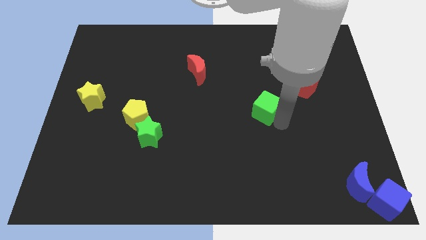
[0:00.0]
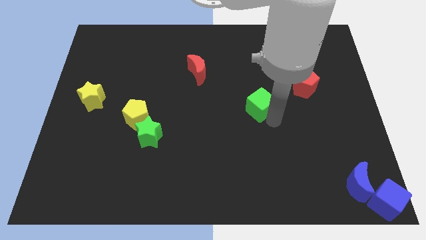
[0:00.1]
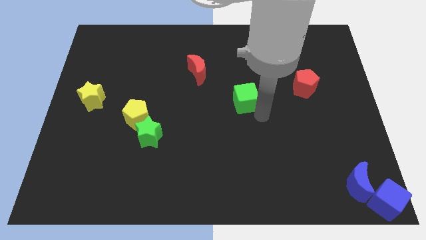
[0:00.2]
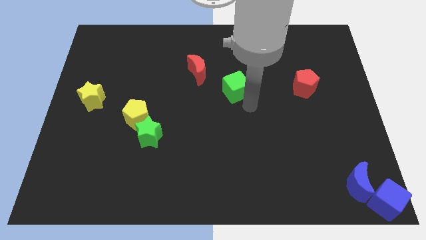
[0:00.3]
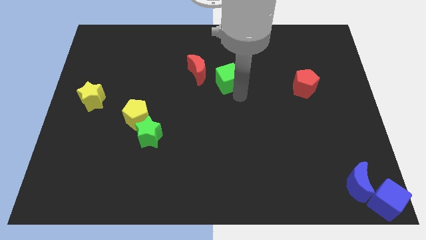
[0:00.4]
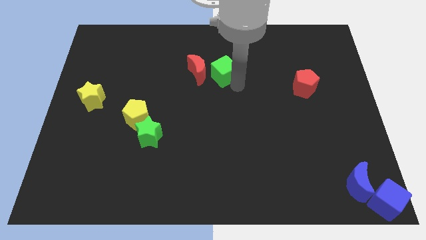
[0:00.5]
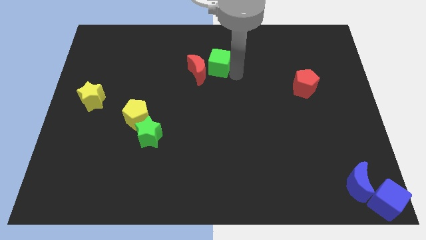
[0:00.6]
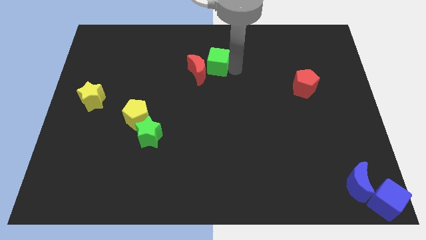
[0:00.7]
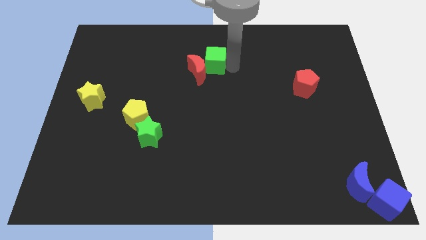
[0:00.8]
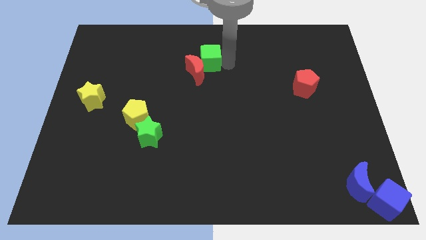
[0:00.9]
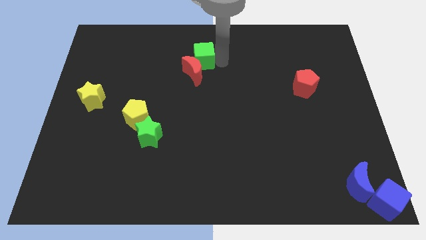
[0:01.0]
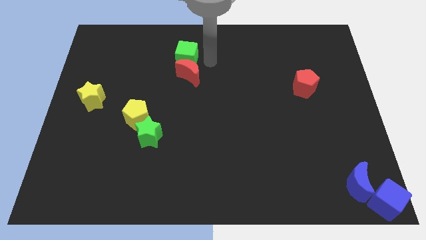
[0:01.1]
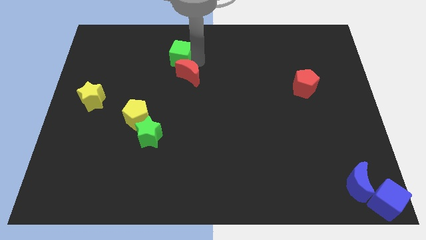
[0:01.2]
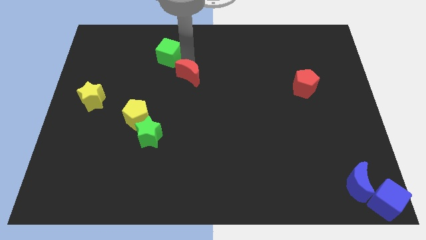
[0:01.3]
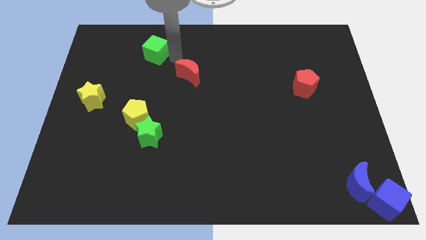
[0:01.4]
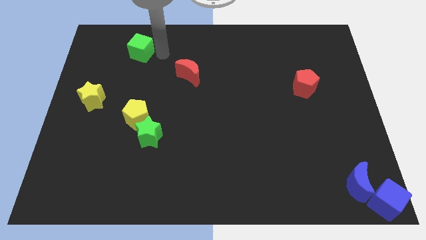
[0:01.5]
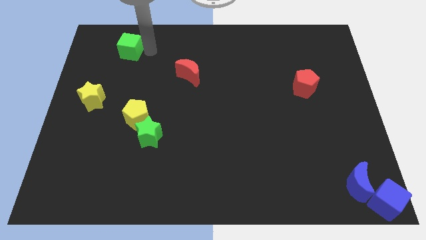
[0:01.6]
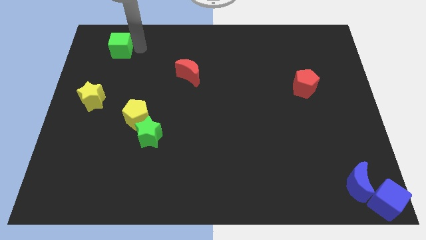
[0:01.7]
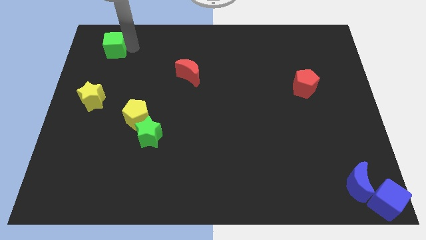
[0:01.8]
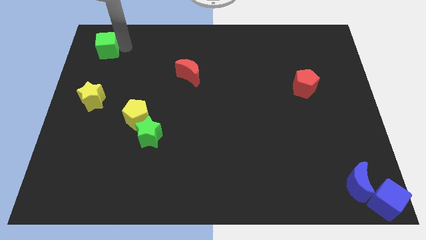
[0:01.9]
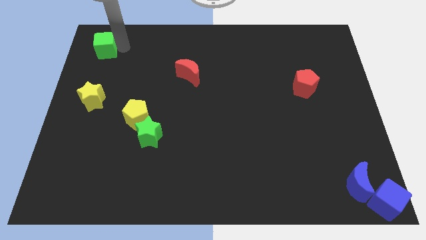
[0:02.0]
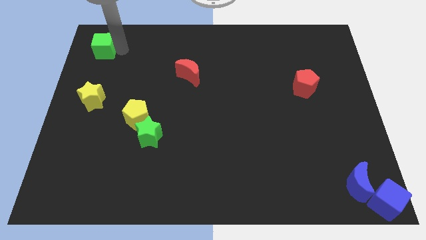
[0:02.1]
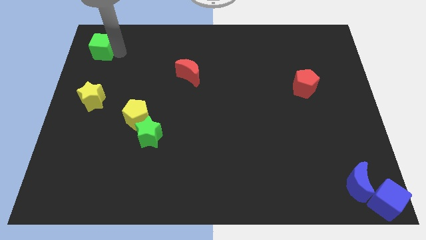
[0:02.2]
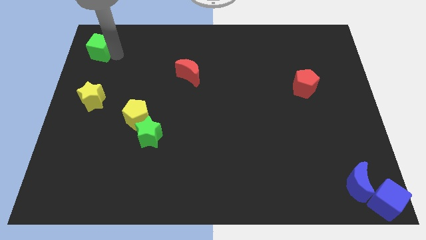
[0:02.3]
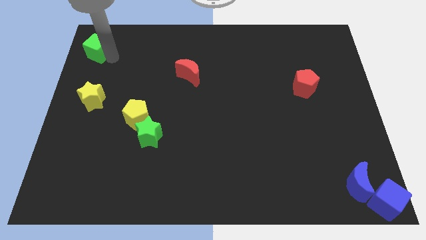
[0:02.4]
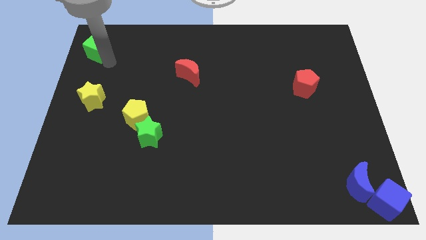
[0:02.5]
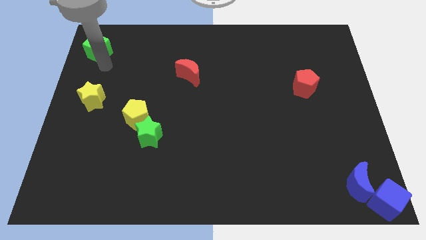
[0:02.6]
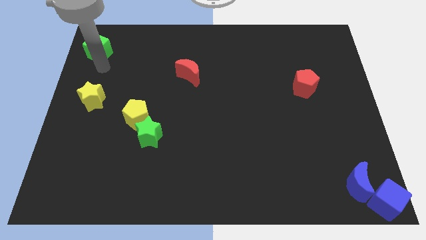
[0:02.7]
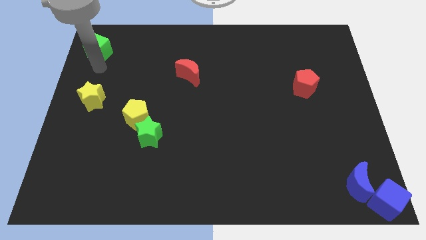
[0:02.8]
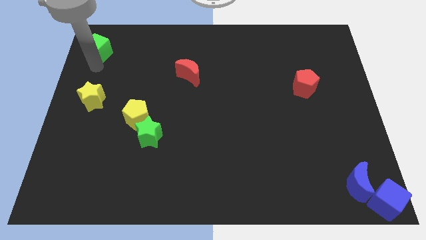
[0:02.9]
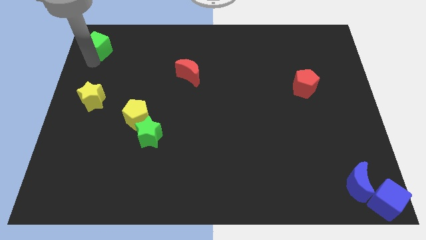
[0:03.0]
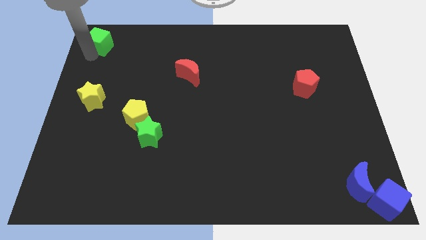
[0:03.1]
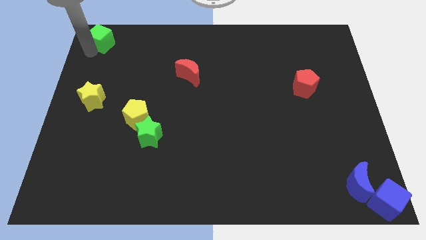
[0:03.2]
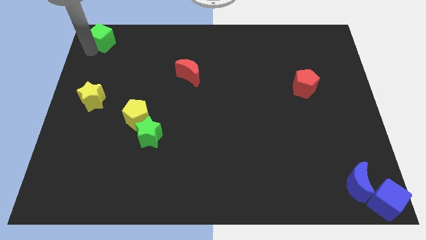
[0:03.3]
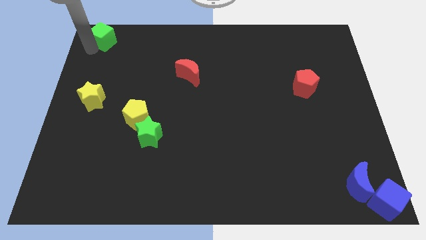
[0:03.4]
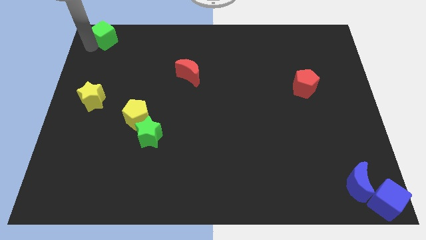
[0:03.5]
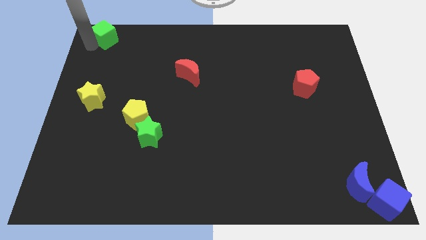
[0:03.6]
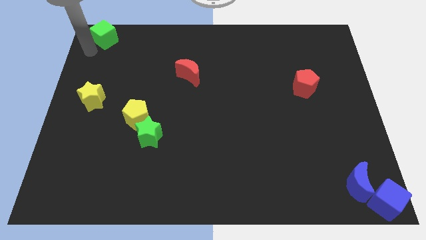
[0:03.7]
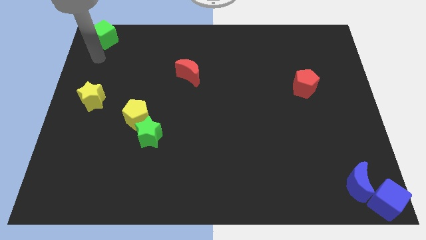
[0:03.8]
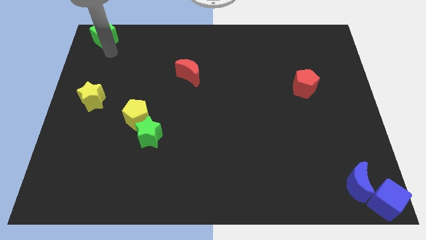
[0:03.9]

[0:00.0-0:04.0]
push green cube on top left corner

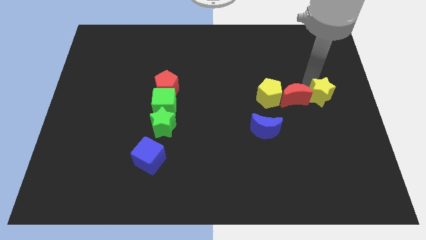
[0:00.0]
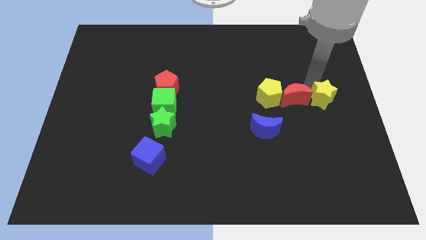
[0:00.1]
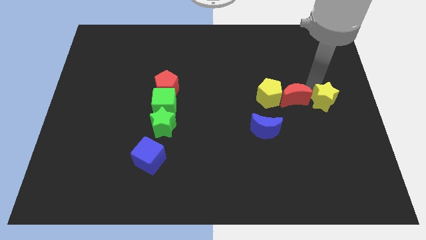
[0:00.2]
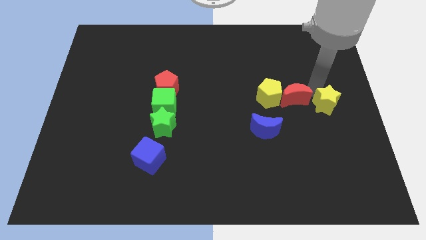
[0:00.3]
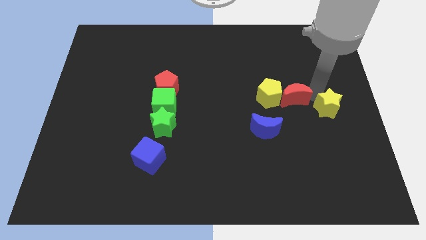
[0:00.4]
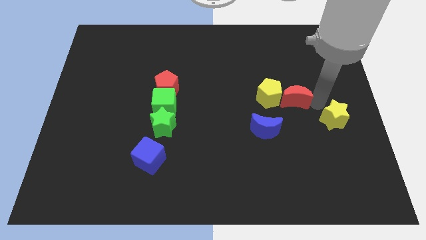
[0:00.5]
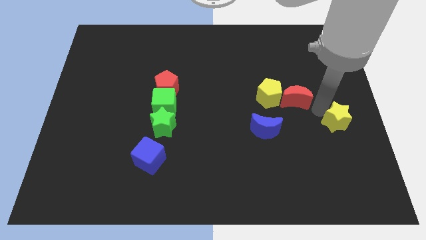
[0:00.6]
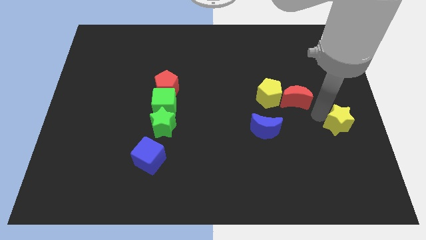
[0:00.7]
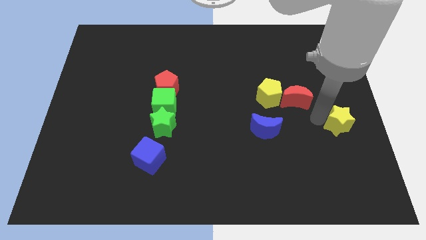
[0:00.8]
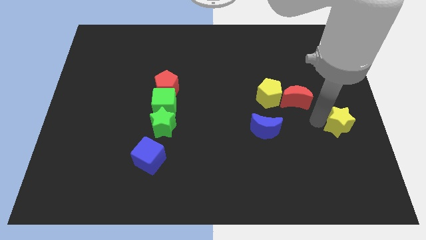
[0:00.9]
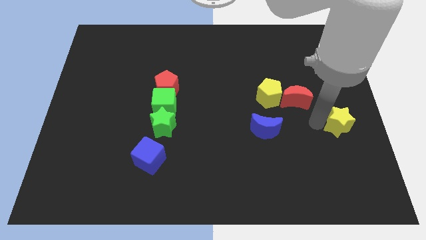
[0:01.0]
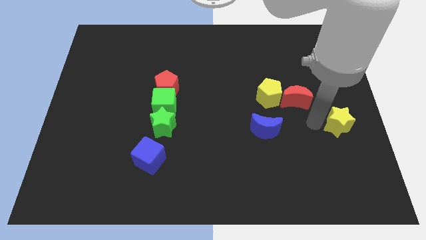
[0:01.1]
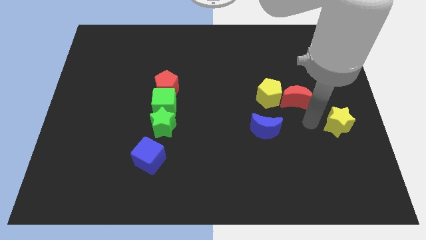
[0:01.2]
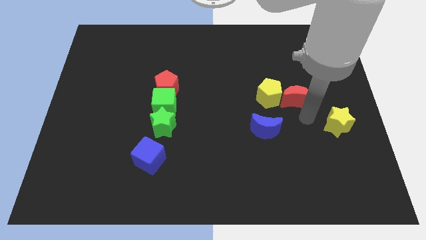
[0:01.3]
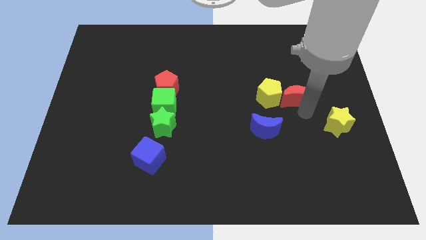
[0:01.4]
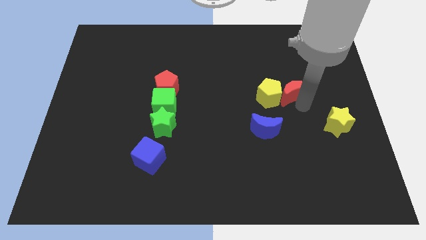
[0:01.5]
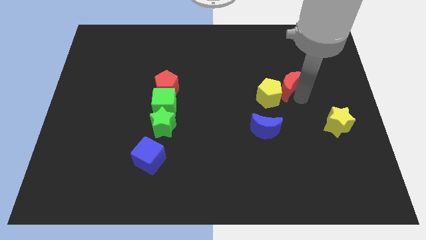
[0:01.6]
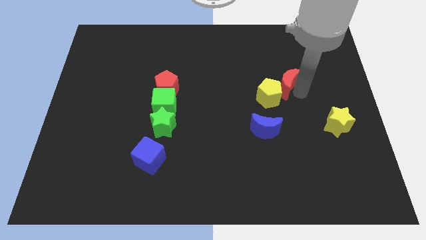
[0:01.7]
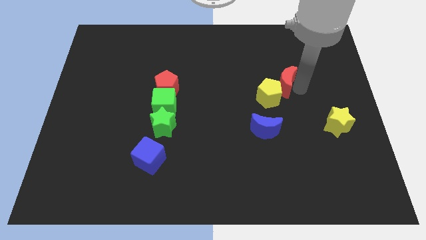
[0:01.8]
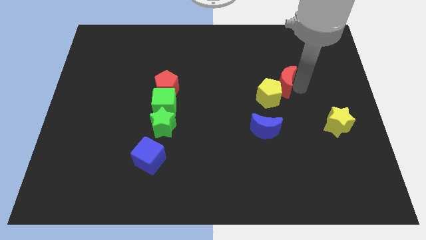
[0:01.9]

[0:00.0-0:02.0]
separate yellow star and the red moon

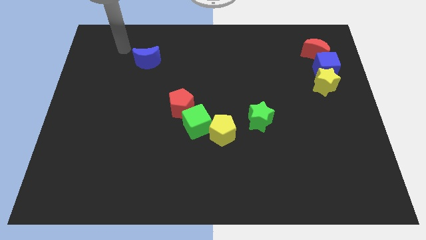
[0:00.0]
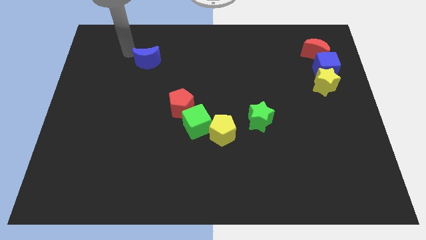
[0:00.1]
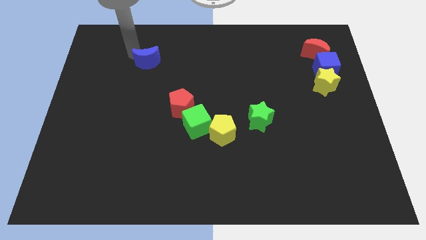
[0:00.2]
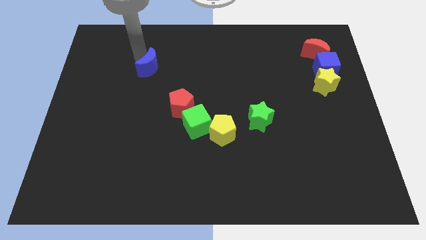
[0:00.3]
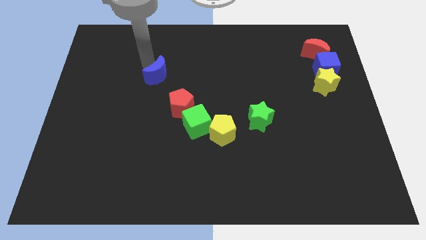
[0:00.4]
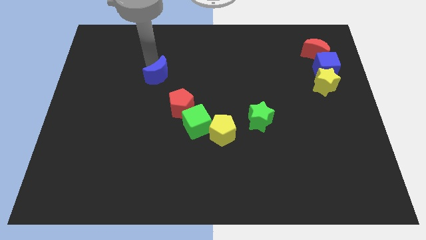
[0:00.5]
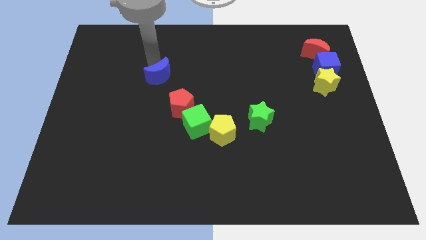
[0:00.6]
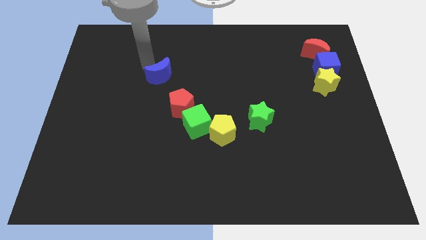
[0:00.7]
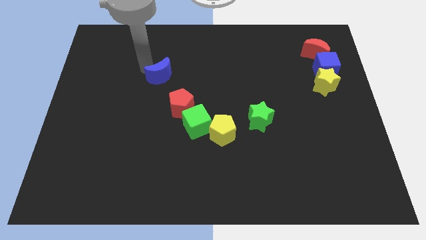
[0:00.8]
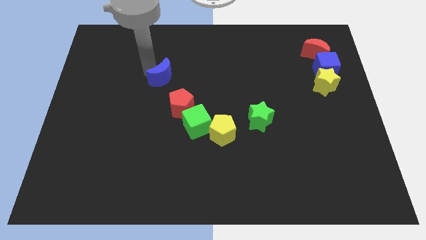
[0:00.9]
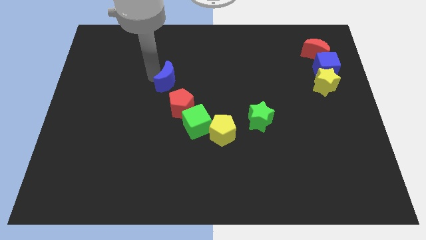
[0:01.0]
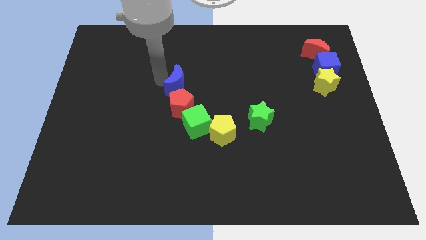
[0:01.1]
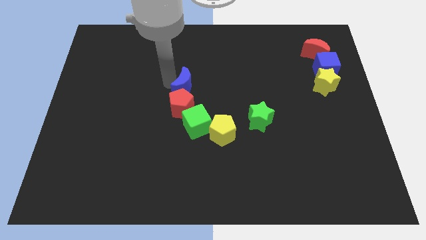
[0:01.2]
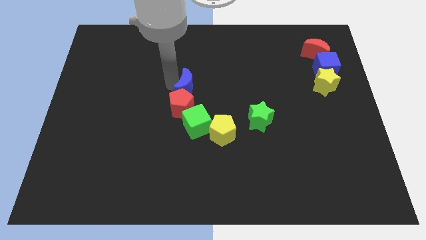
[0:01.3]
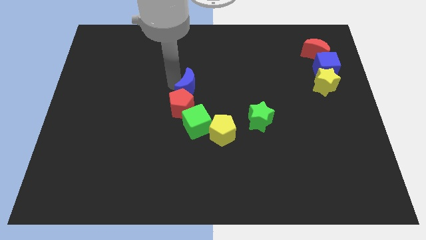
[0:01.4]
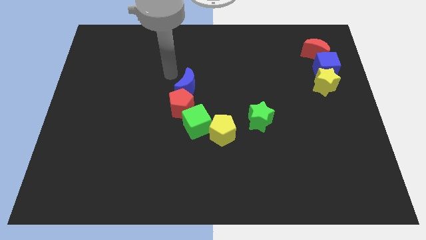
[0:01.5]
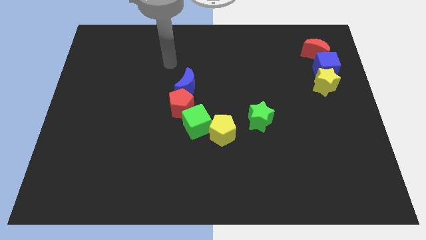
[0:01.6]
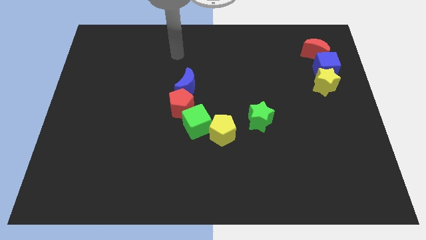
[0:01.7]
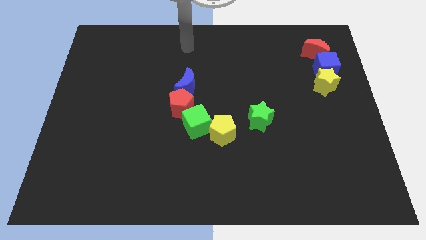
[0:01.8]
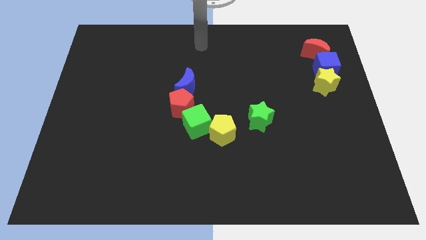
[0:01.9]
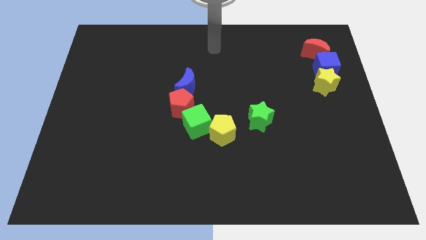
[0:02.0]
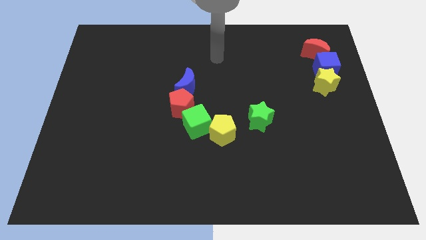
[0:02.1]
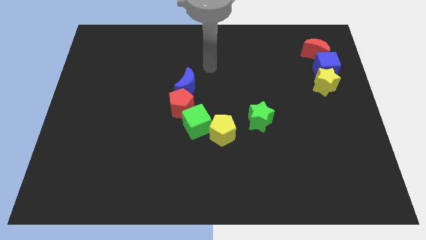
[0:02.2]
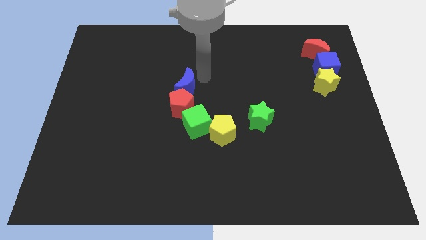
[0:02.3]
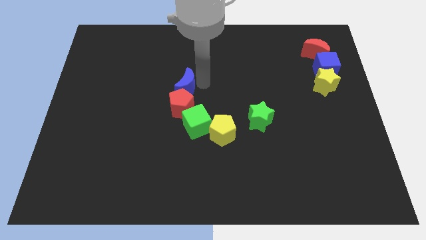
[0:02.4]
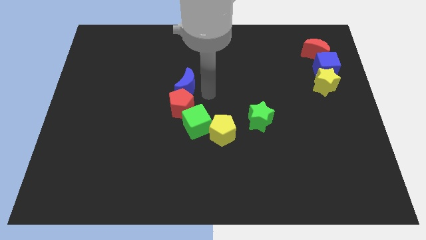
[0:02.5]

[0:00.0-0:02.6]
drag blue moon above red pentagon

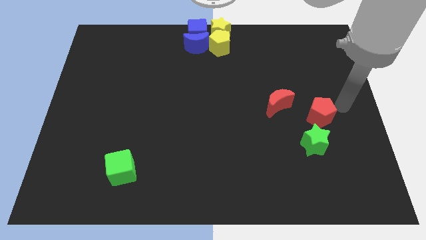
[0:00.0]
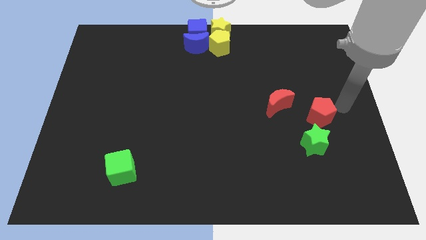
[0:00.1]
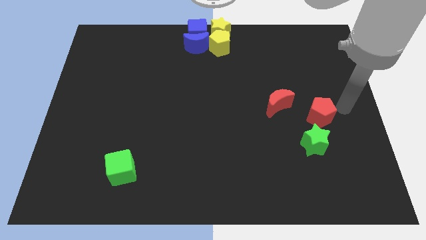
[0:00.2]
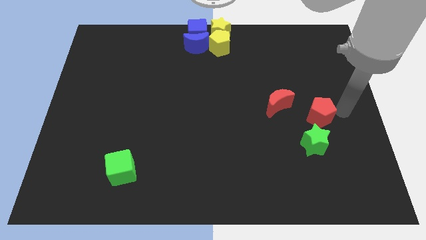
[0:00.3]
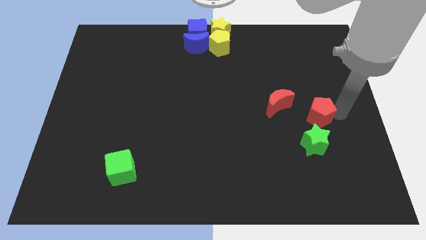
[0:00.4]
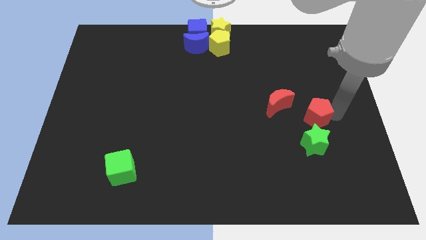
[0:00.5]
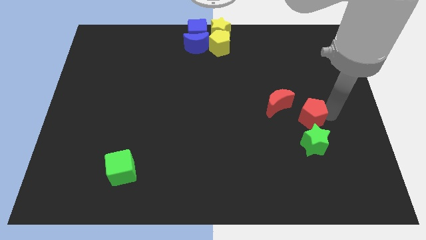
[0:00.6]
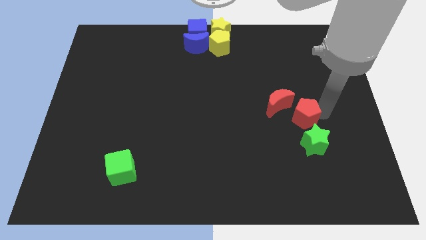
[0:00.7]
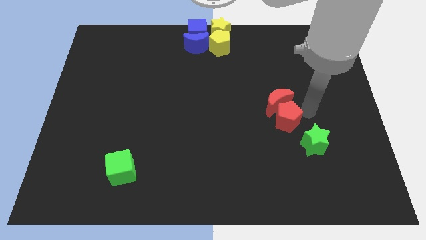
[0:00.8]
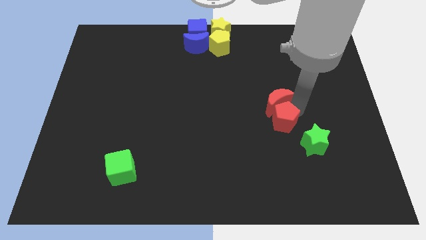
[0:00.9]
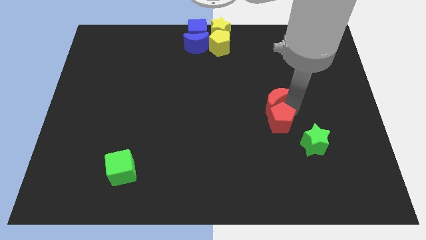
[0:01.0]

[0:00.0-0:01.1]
move the red crescent into the red pentagon
